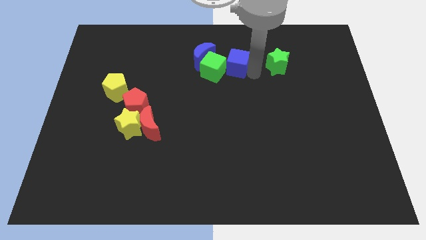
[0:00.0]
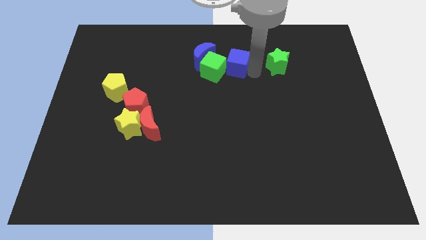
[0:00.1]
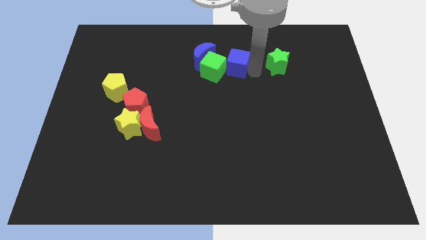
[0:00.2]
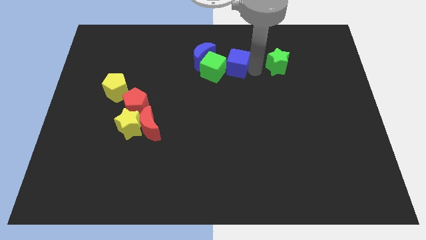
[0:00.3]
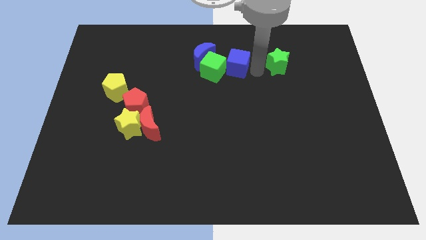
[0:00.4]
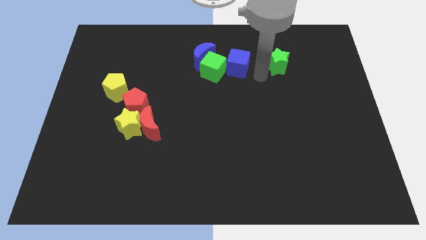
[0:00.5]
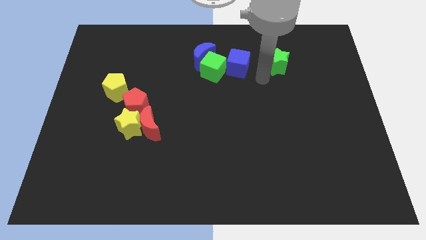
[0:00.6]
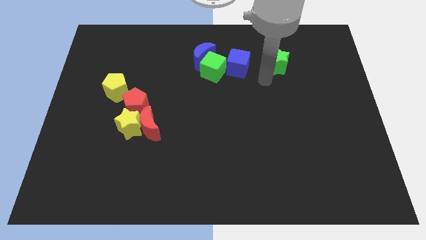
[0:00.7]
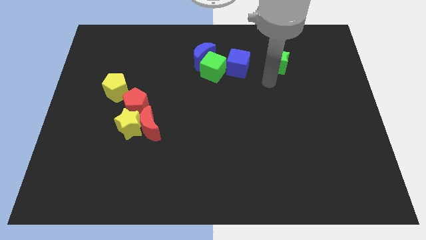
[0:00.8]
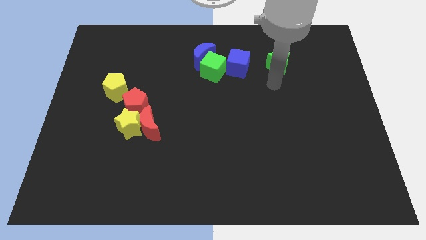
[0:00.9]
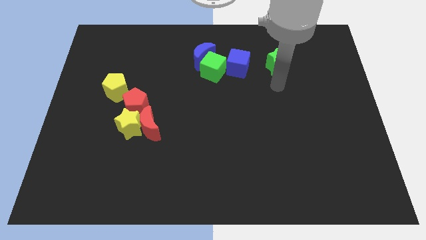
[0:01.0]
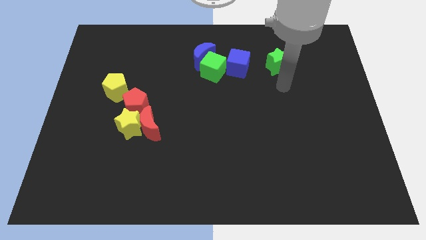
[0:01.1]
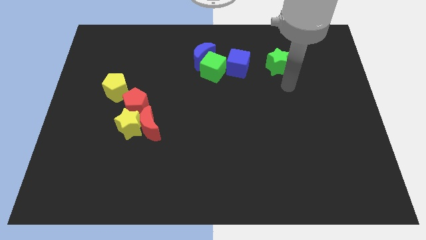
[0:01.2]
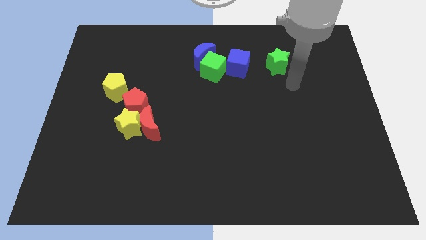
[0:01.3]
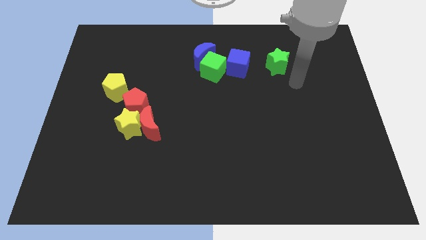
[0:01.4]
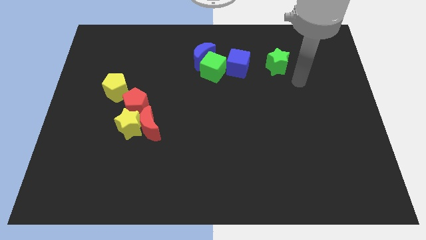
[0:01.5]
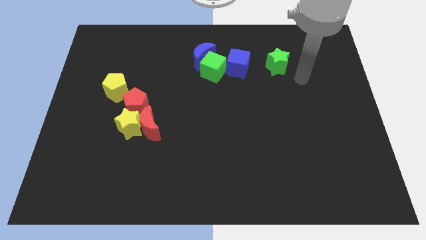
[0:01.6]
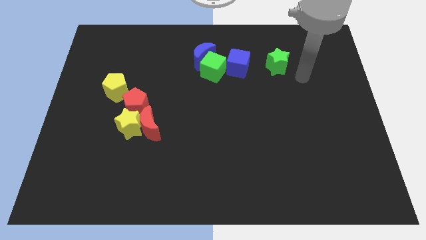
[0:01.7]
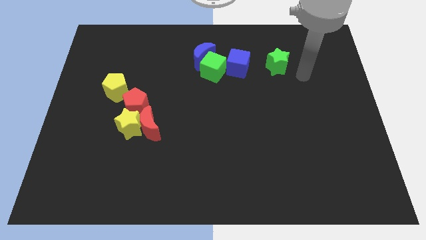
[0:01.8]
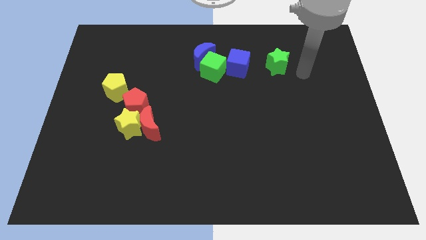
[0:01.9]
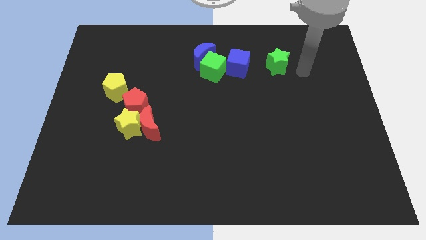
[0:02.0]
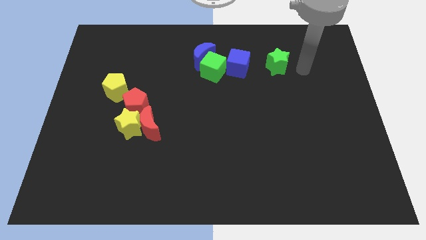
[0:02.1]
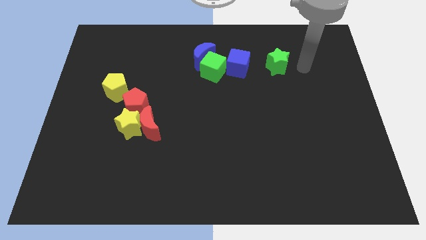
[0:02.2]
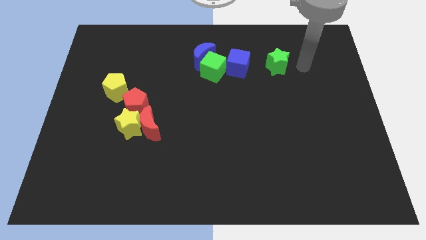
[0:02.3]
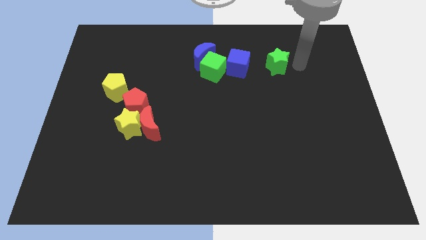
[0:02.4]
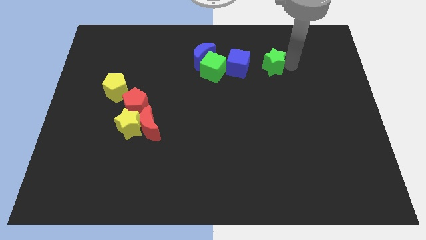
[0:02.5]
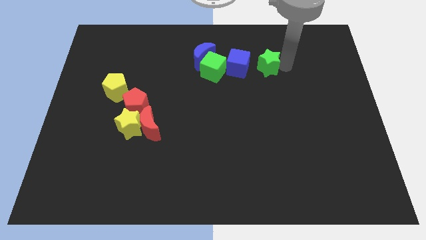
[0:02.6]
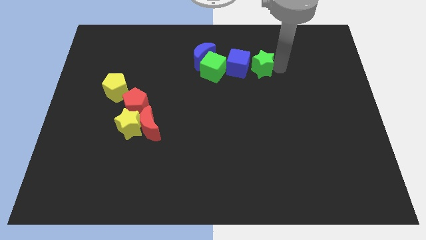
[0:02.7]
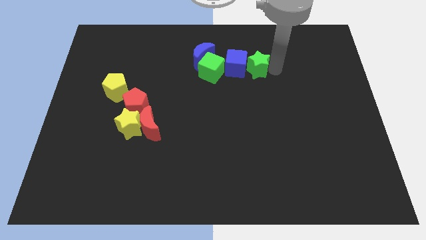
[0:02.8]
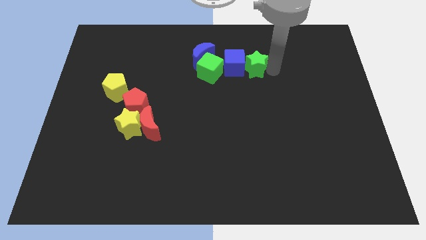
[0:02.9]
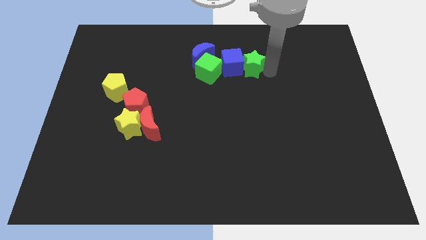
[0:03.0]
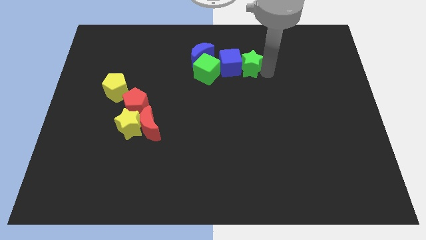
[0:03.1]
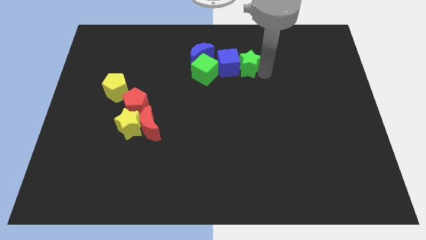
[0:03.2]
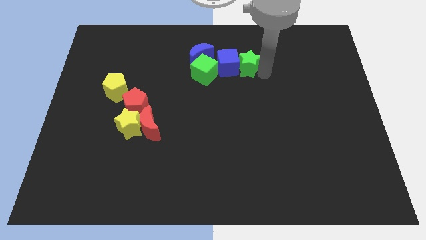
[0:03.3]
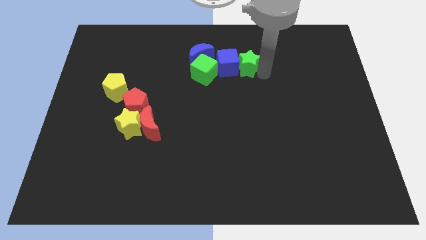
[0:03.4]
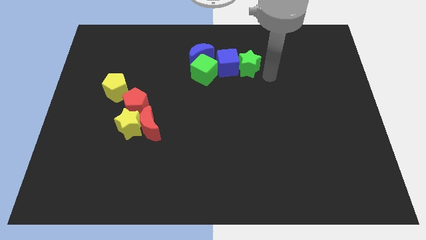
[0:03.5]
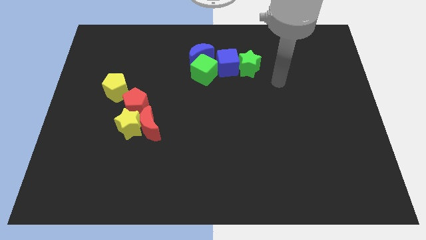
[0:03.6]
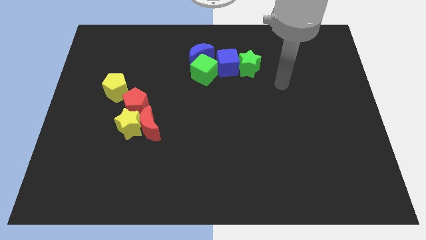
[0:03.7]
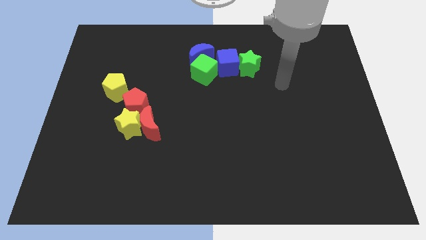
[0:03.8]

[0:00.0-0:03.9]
slide the green star into the blue cube

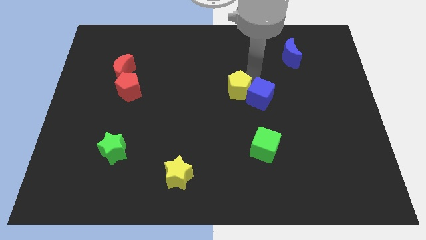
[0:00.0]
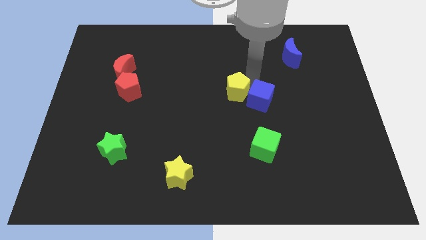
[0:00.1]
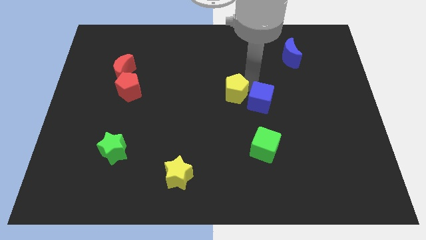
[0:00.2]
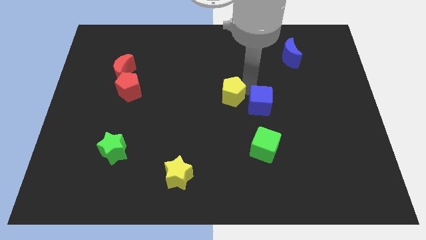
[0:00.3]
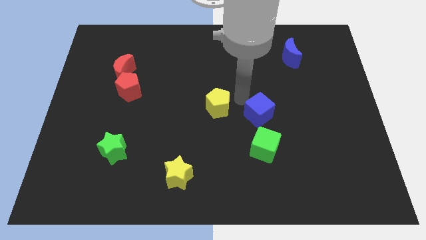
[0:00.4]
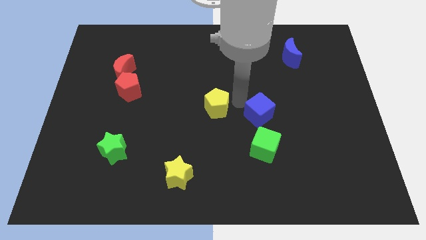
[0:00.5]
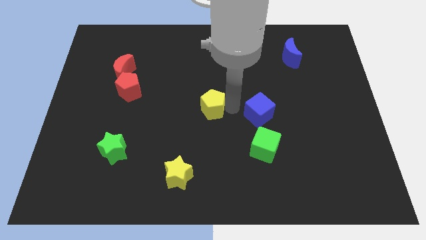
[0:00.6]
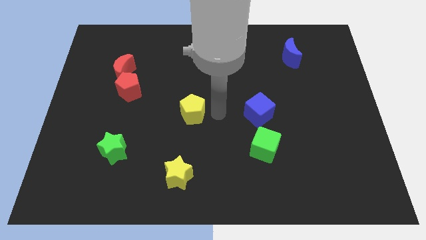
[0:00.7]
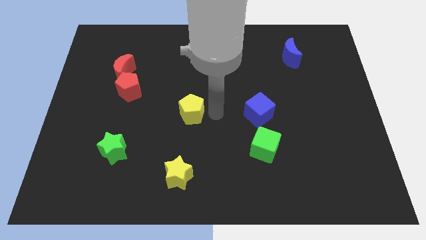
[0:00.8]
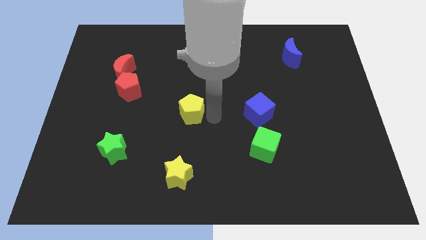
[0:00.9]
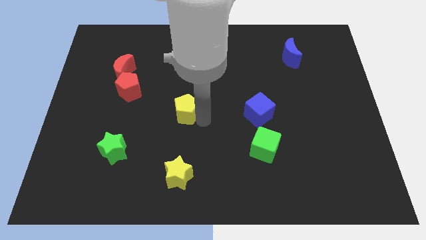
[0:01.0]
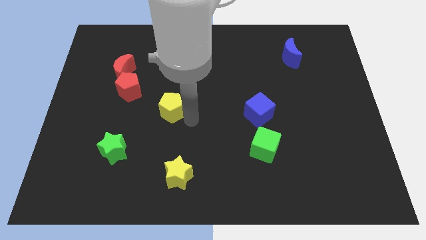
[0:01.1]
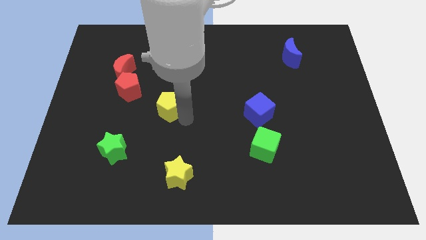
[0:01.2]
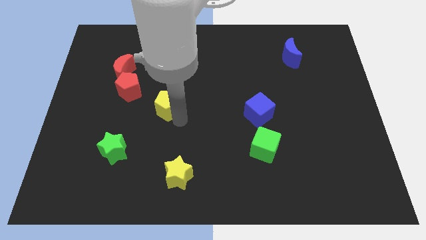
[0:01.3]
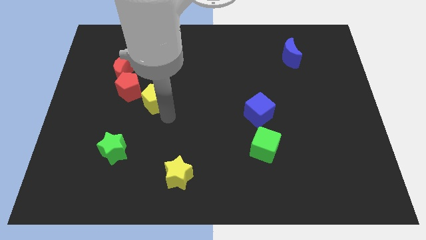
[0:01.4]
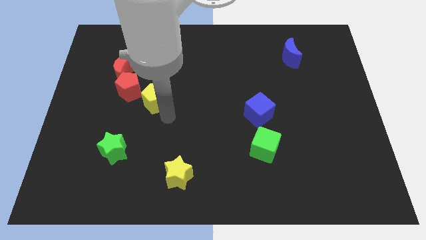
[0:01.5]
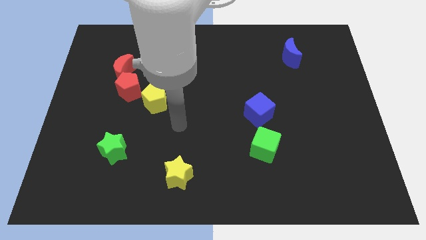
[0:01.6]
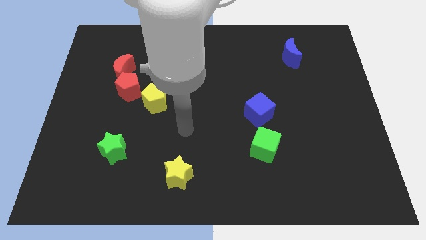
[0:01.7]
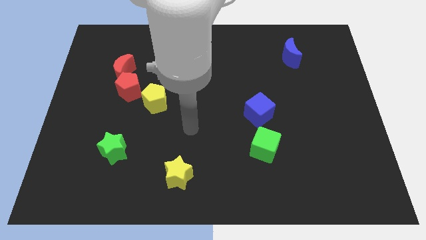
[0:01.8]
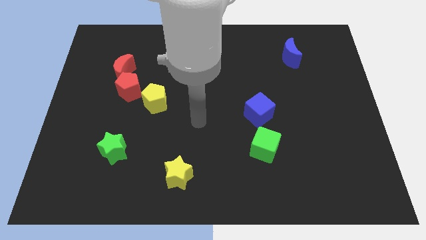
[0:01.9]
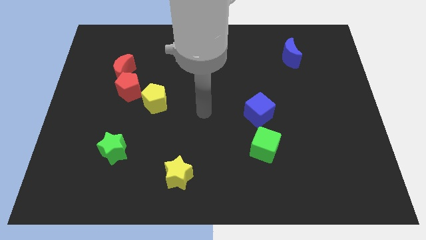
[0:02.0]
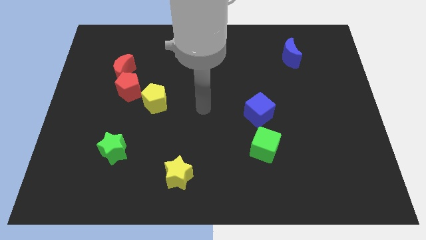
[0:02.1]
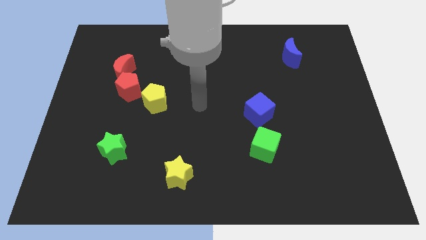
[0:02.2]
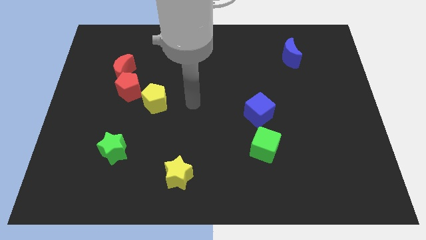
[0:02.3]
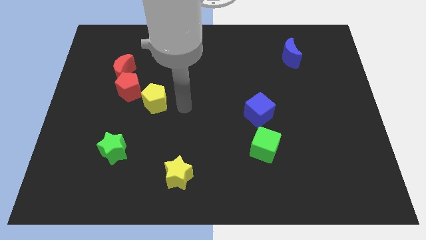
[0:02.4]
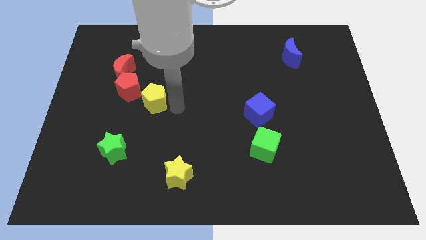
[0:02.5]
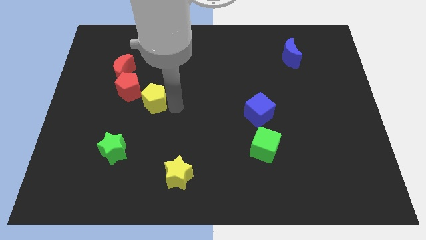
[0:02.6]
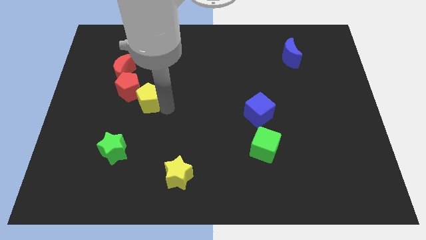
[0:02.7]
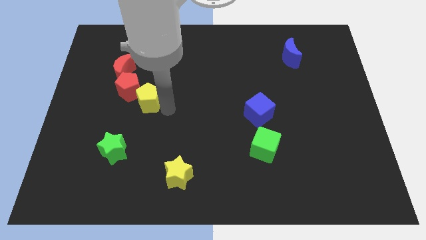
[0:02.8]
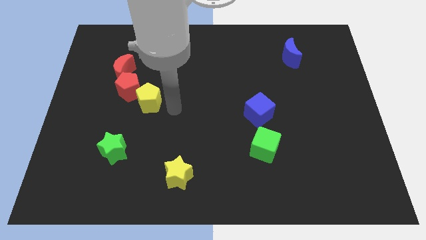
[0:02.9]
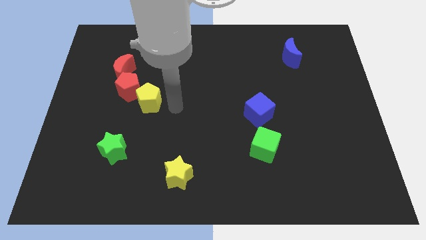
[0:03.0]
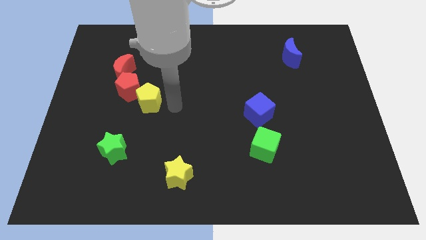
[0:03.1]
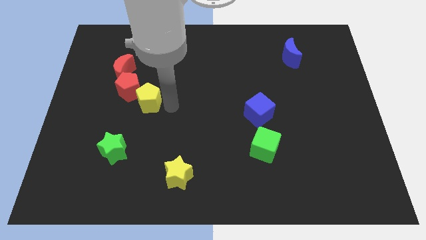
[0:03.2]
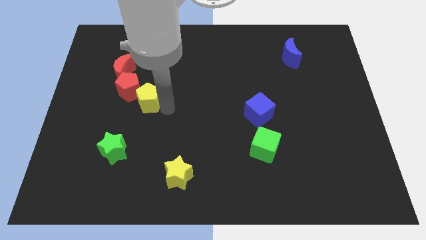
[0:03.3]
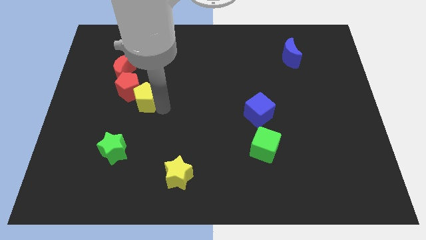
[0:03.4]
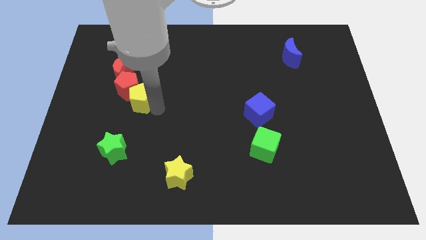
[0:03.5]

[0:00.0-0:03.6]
apart yellow pentagon and blue cube

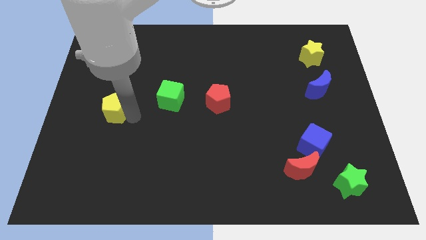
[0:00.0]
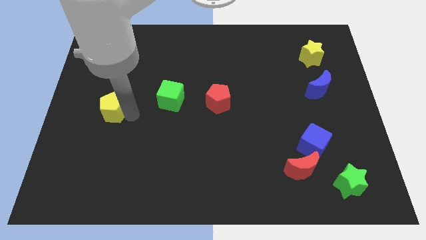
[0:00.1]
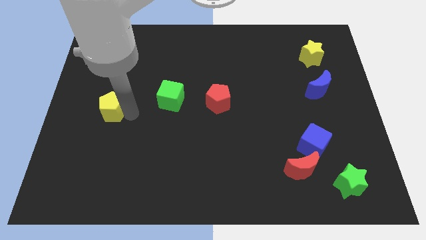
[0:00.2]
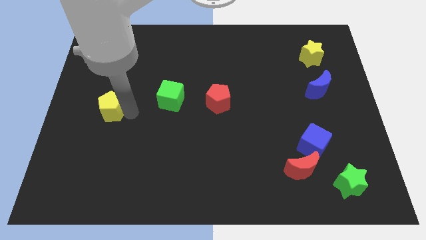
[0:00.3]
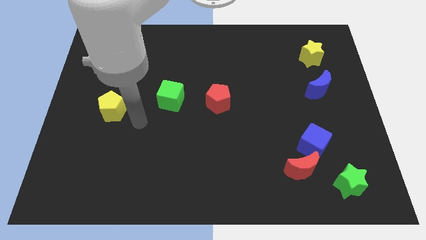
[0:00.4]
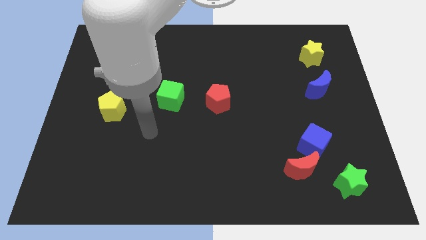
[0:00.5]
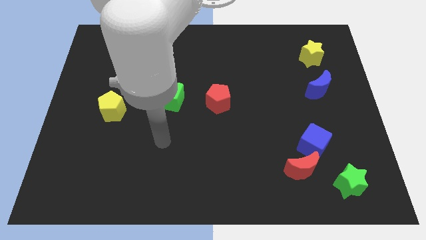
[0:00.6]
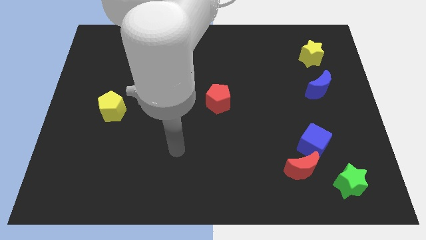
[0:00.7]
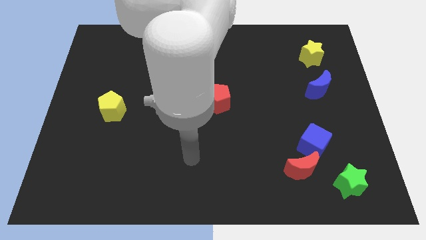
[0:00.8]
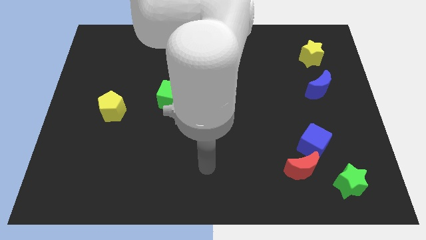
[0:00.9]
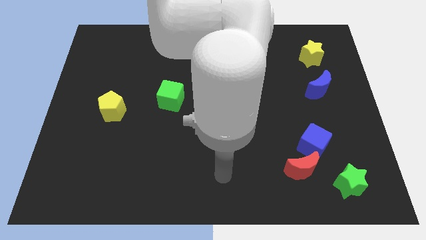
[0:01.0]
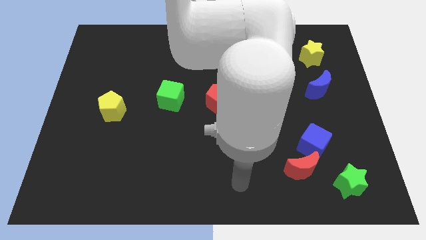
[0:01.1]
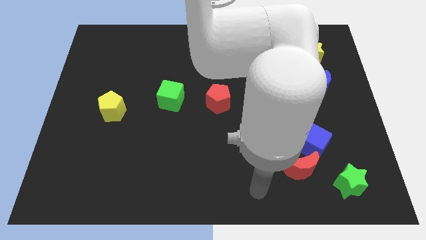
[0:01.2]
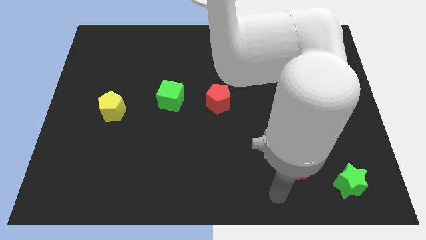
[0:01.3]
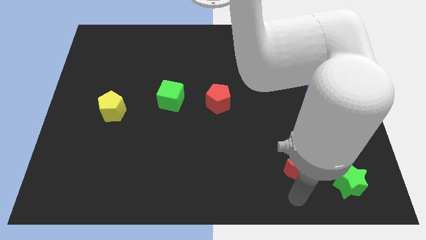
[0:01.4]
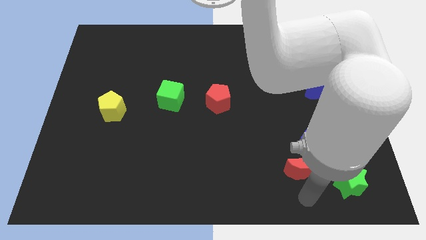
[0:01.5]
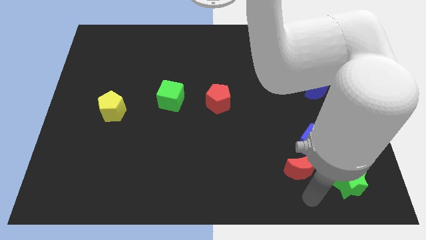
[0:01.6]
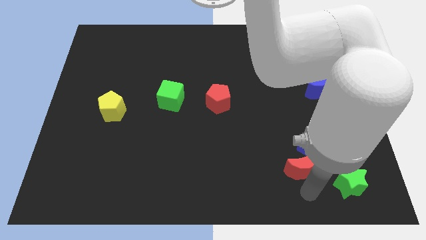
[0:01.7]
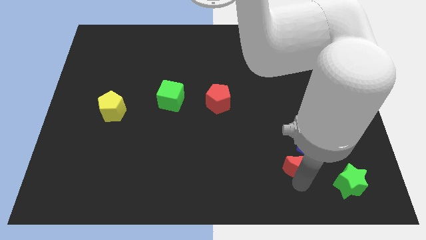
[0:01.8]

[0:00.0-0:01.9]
place the arm below the red moon
